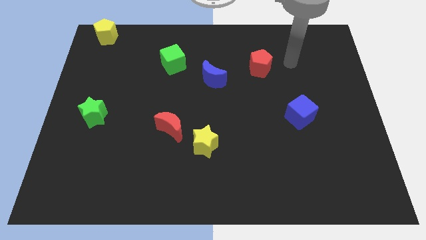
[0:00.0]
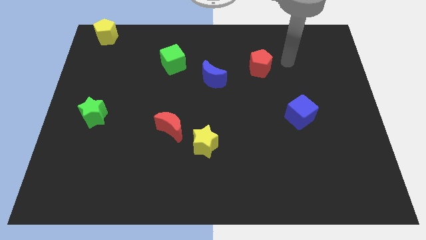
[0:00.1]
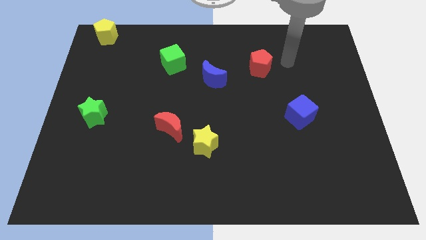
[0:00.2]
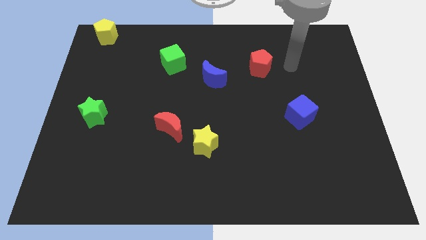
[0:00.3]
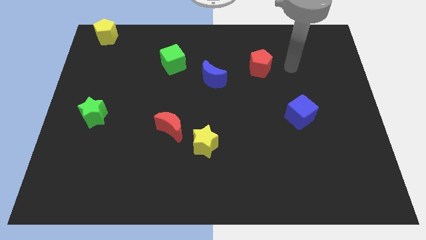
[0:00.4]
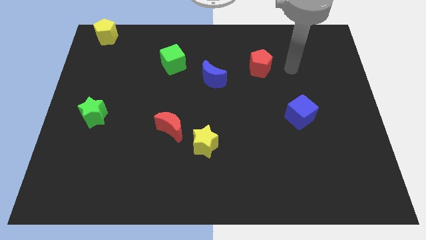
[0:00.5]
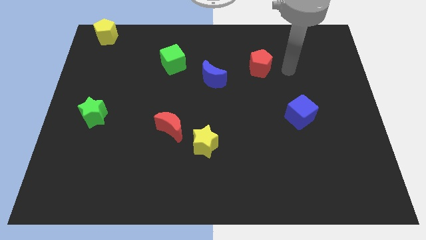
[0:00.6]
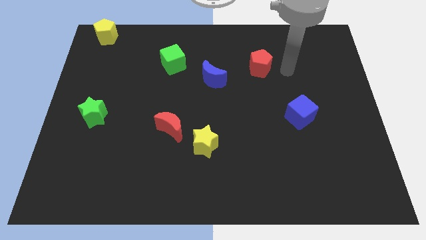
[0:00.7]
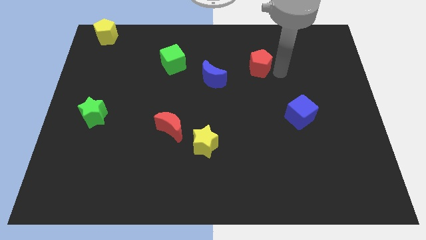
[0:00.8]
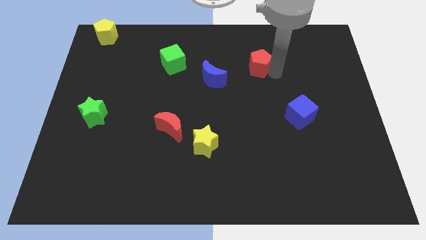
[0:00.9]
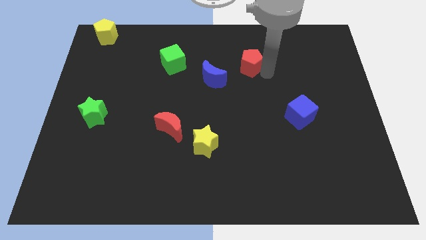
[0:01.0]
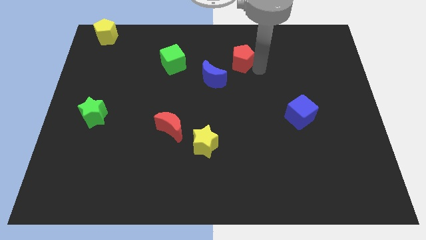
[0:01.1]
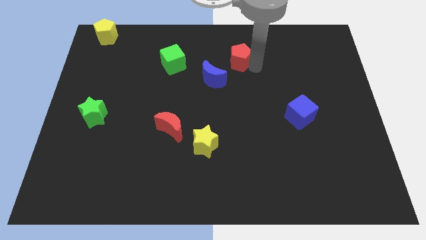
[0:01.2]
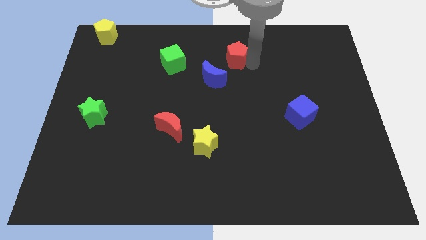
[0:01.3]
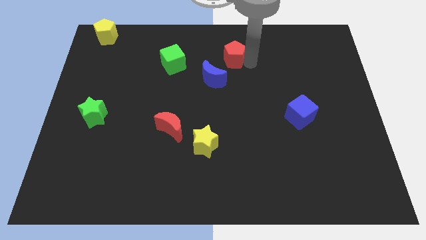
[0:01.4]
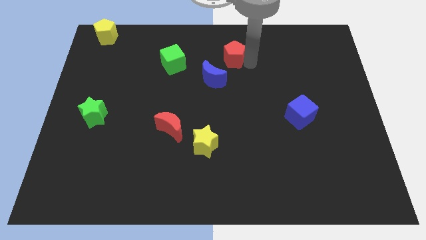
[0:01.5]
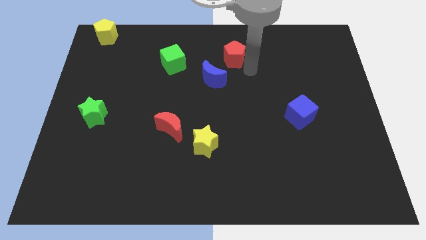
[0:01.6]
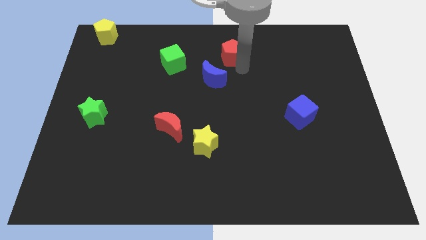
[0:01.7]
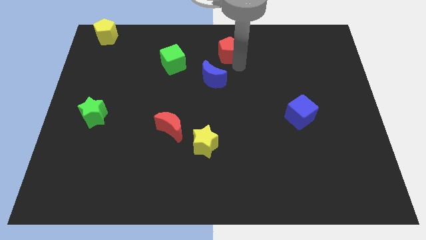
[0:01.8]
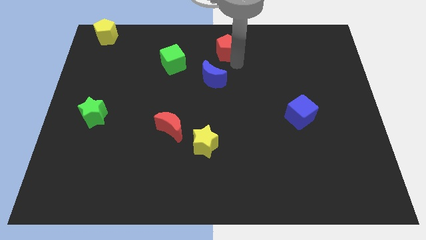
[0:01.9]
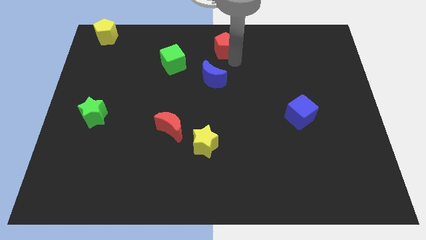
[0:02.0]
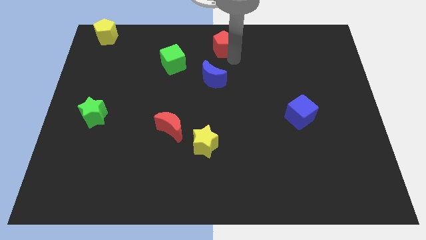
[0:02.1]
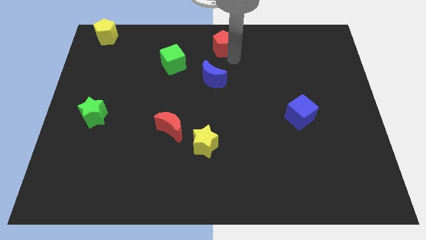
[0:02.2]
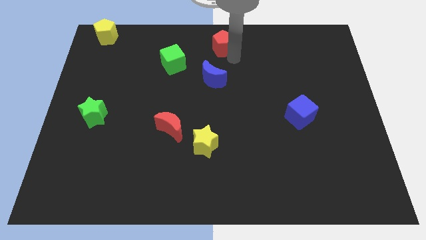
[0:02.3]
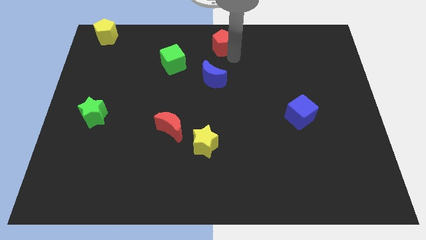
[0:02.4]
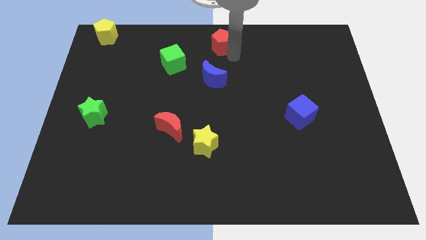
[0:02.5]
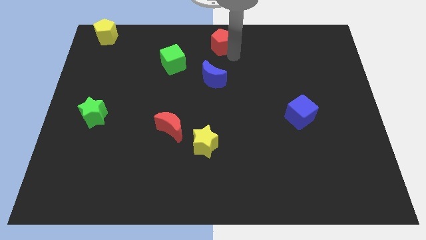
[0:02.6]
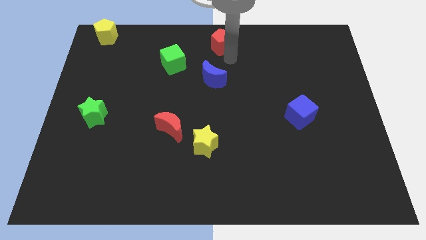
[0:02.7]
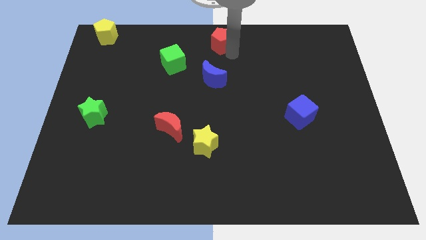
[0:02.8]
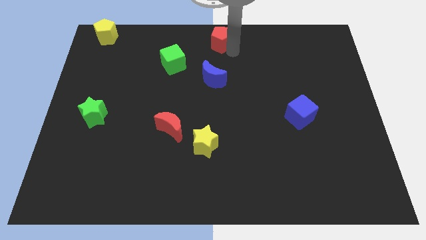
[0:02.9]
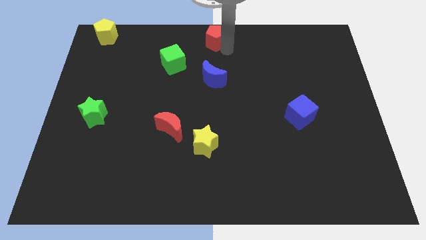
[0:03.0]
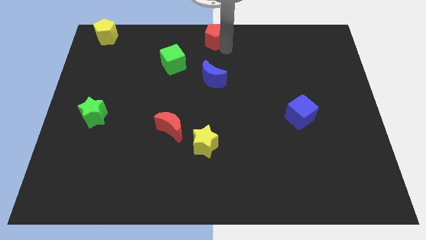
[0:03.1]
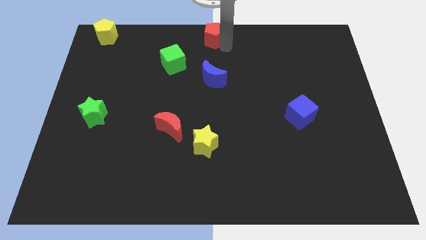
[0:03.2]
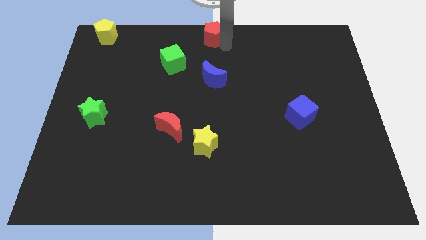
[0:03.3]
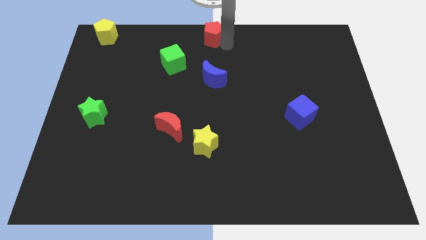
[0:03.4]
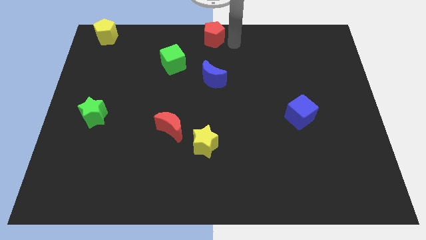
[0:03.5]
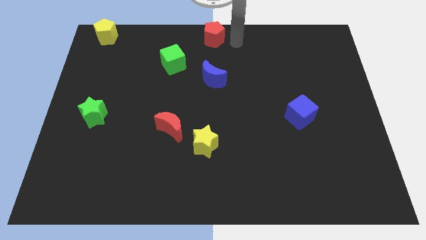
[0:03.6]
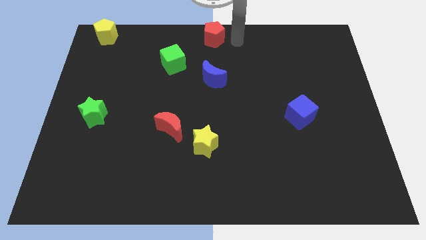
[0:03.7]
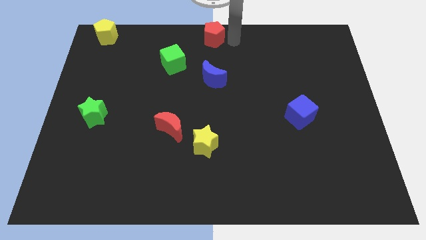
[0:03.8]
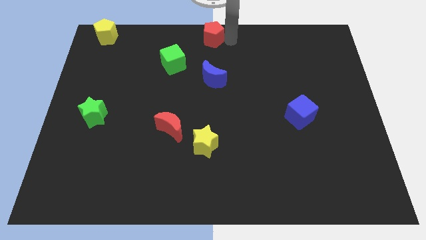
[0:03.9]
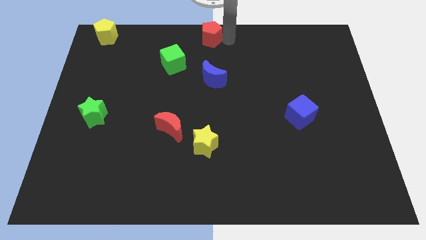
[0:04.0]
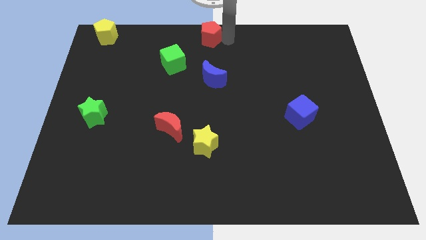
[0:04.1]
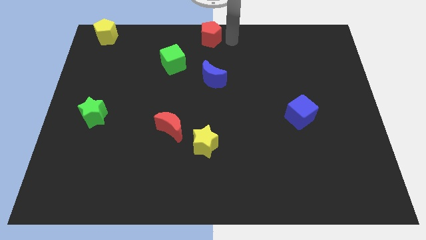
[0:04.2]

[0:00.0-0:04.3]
put the red pentagon at the top center of the board

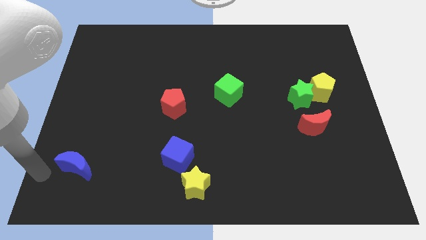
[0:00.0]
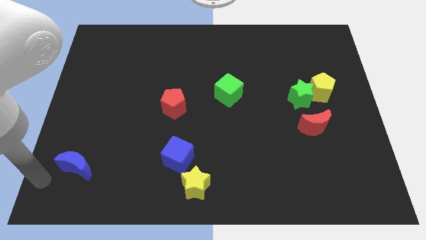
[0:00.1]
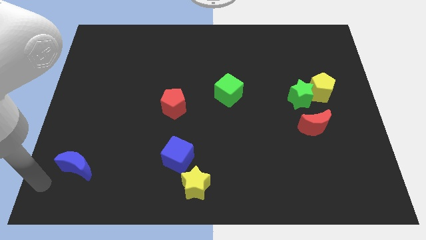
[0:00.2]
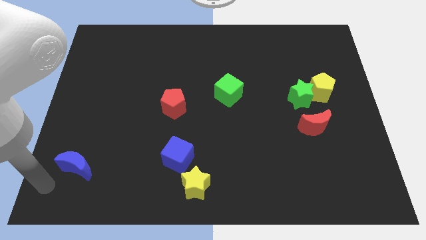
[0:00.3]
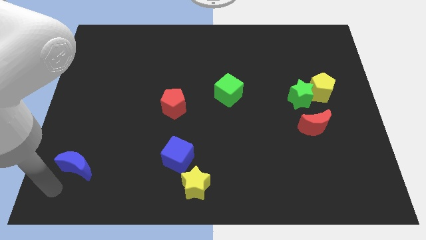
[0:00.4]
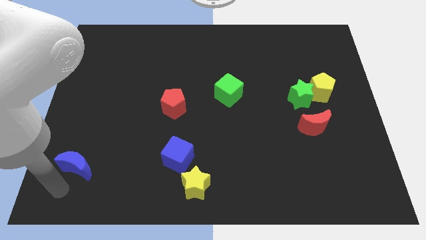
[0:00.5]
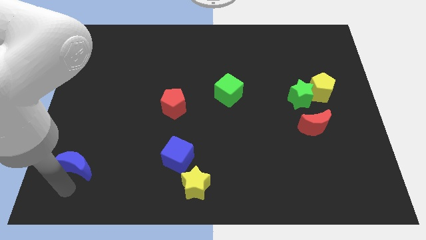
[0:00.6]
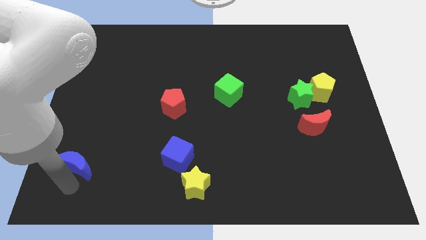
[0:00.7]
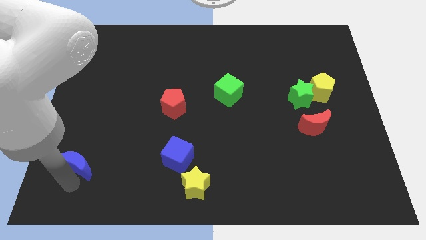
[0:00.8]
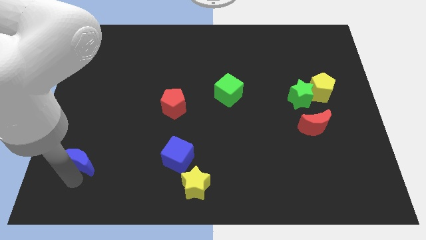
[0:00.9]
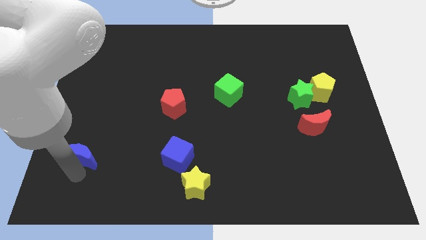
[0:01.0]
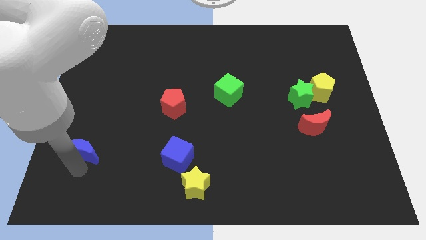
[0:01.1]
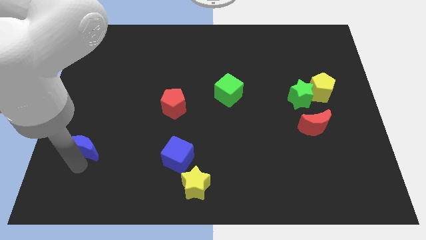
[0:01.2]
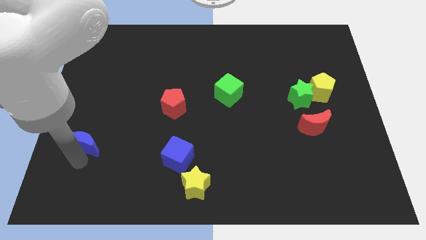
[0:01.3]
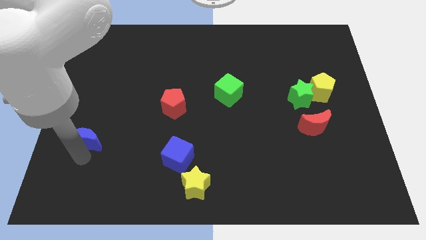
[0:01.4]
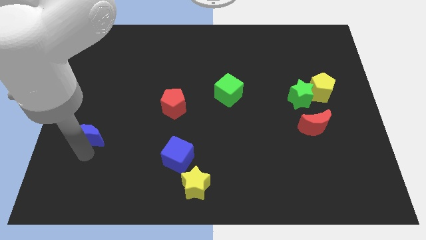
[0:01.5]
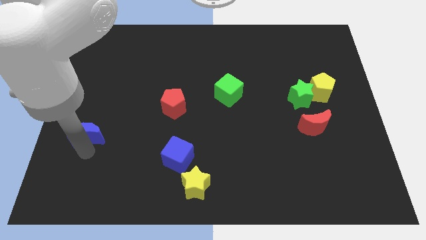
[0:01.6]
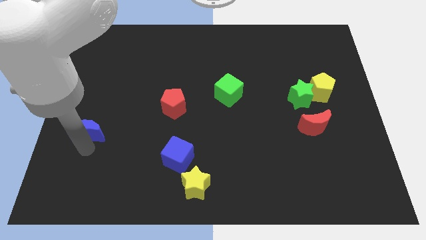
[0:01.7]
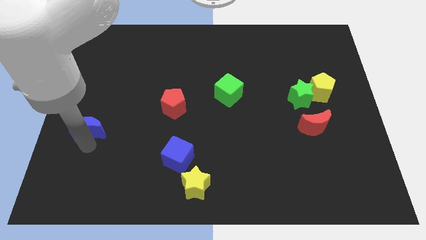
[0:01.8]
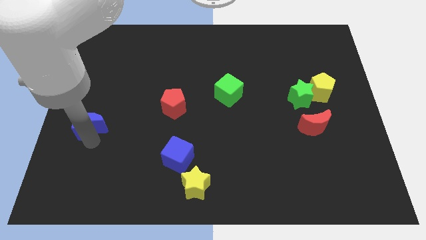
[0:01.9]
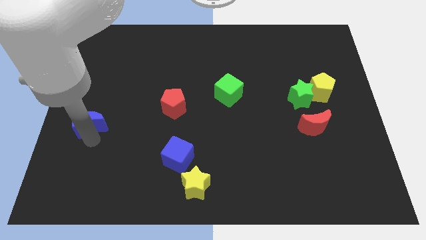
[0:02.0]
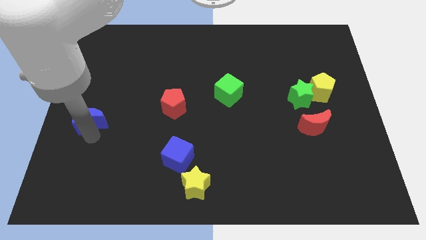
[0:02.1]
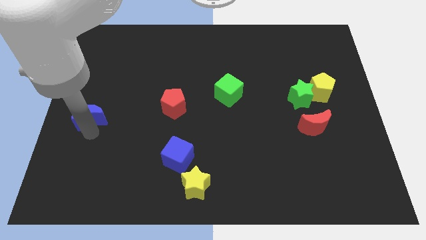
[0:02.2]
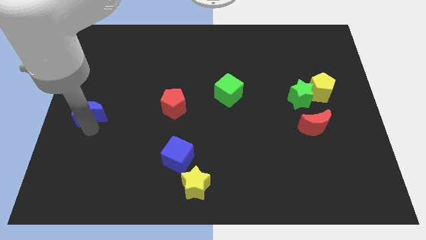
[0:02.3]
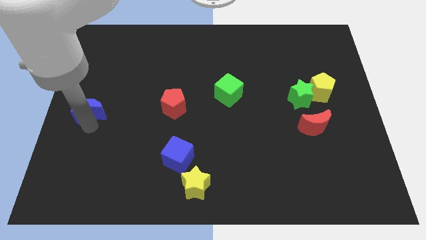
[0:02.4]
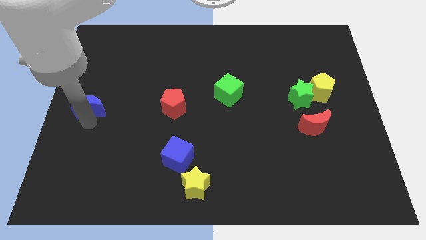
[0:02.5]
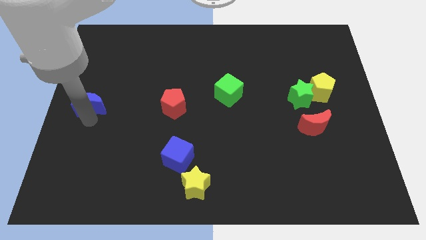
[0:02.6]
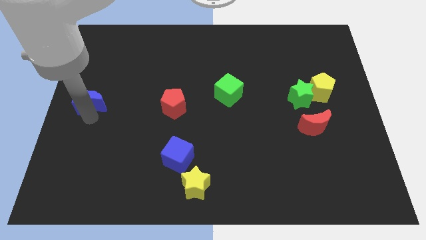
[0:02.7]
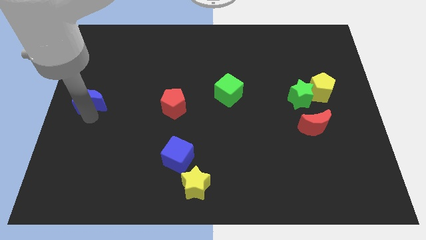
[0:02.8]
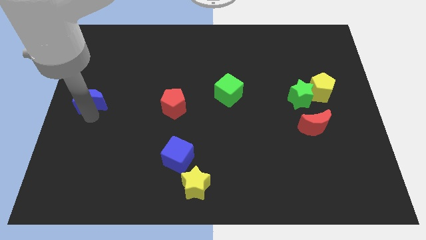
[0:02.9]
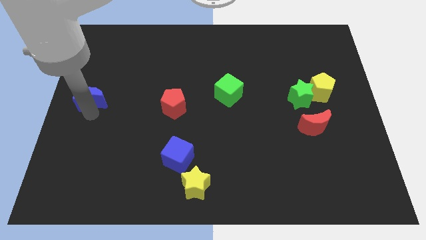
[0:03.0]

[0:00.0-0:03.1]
place the blue crescent to the left of the red pentagon

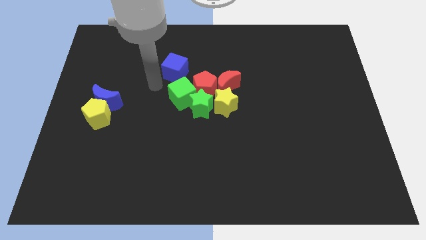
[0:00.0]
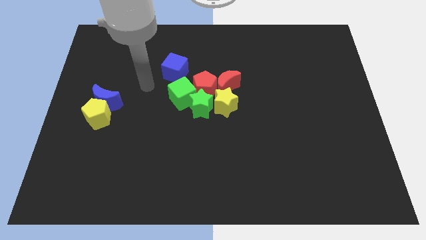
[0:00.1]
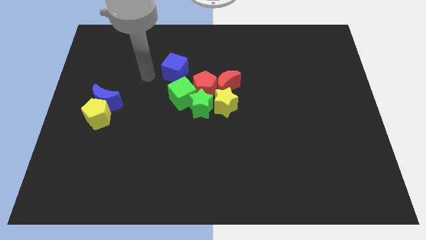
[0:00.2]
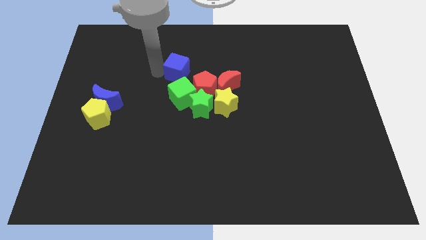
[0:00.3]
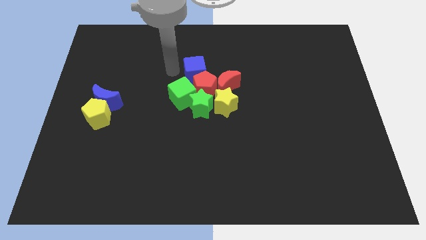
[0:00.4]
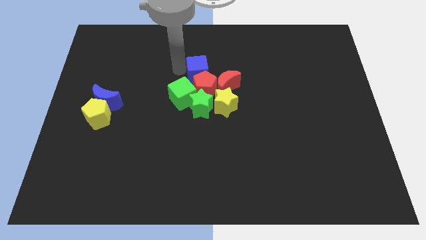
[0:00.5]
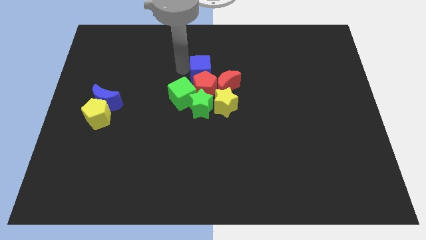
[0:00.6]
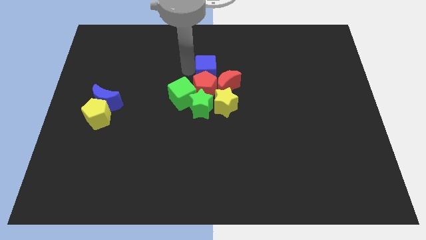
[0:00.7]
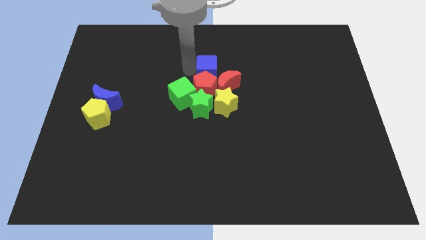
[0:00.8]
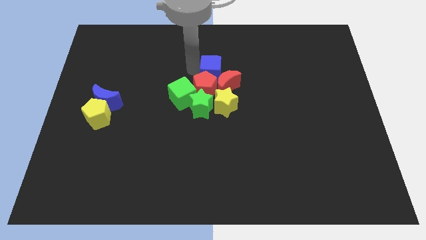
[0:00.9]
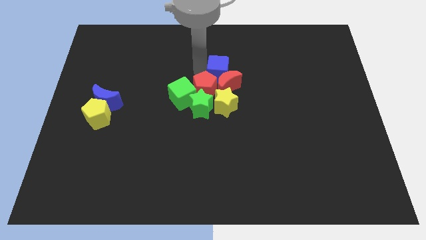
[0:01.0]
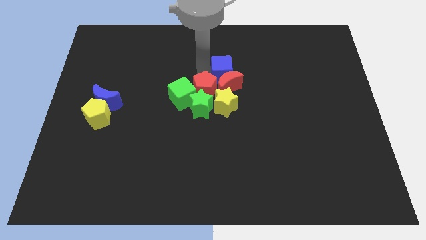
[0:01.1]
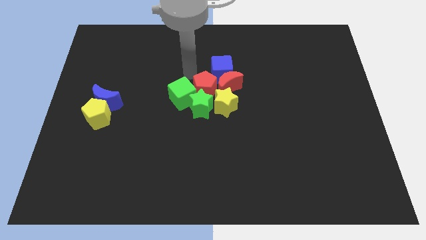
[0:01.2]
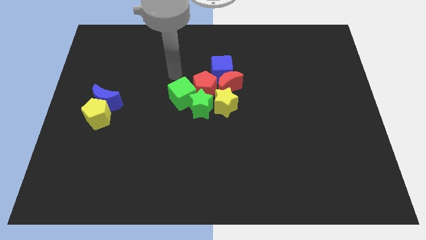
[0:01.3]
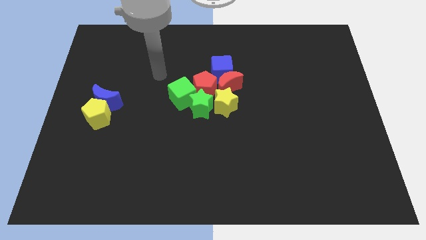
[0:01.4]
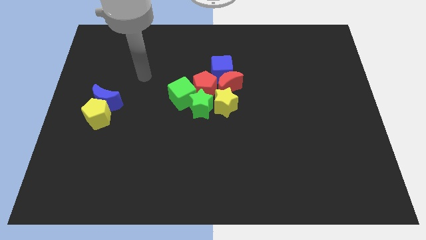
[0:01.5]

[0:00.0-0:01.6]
push the blue cube to the top of the red crescent
